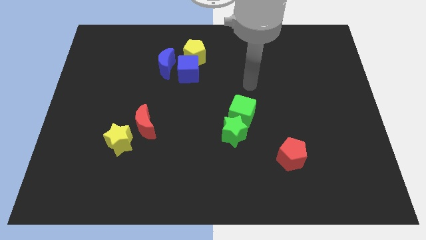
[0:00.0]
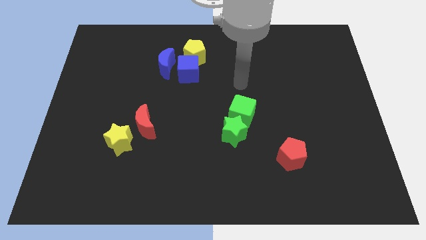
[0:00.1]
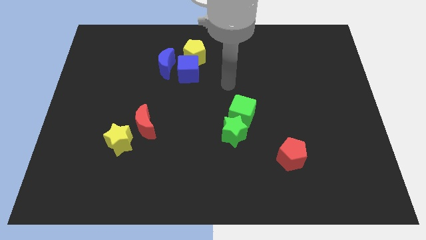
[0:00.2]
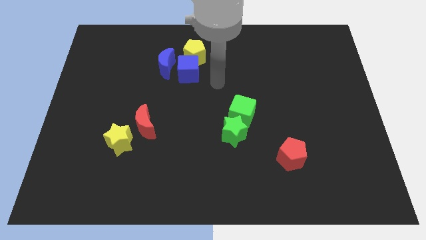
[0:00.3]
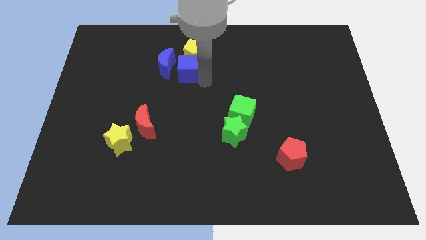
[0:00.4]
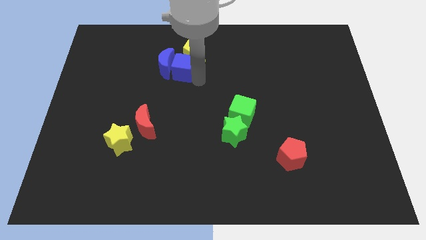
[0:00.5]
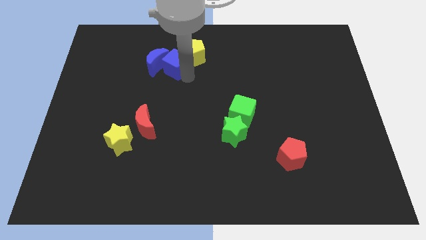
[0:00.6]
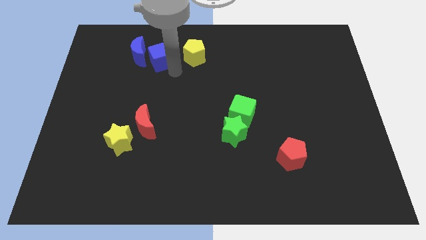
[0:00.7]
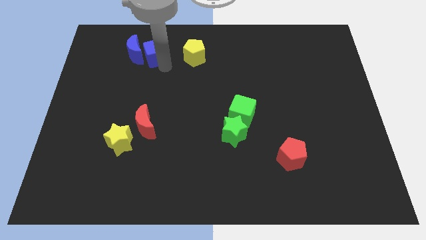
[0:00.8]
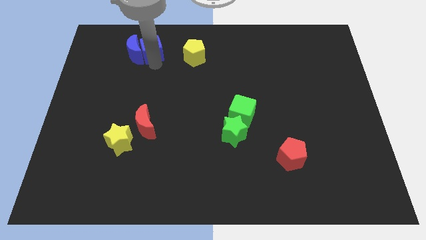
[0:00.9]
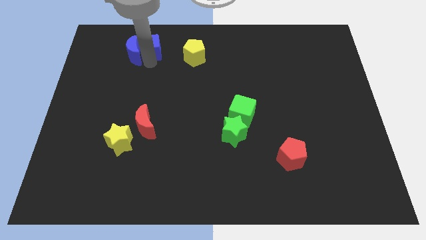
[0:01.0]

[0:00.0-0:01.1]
slide blue blocks up to the left of yellow pentagon

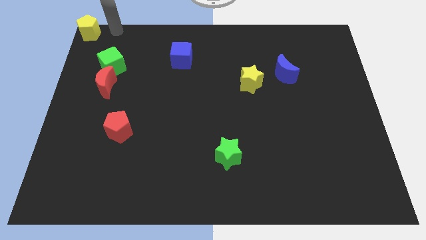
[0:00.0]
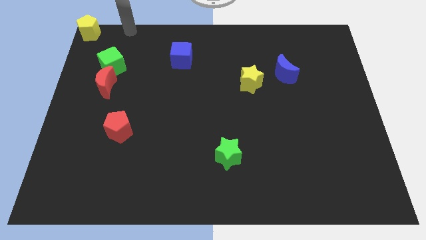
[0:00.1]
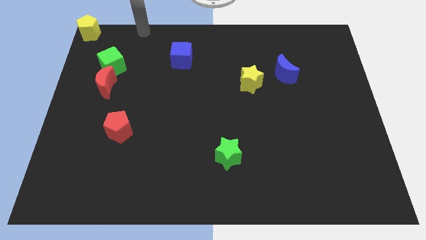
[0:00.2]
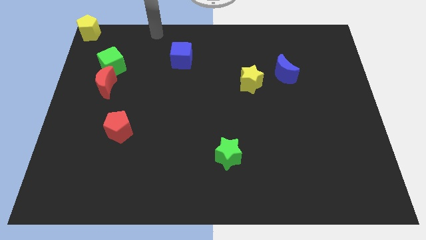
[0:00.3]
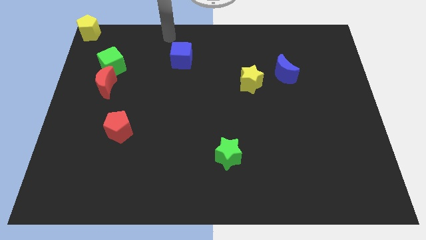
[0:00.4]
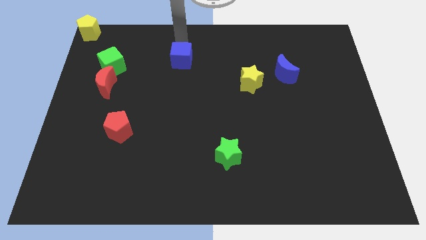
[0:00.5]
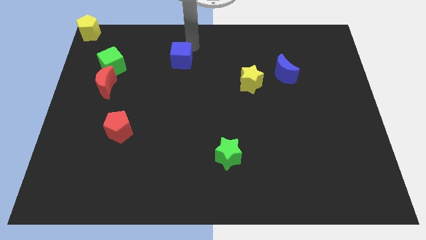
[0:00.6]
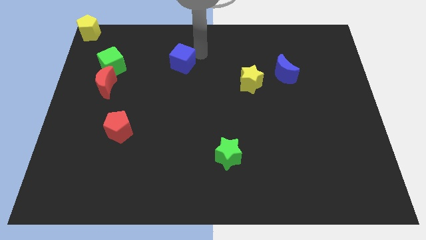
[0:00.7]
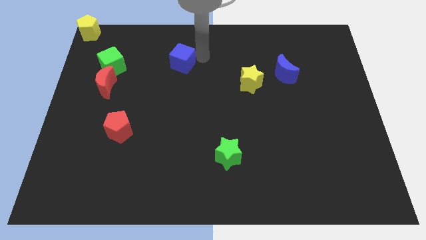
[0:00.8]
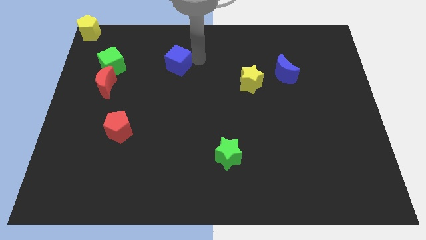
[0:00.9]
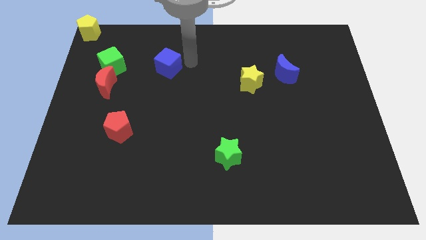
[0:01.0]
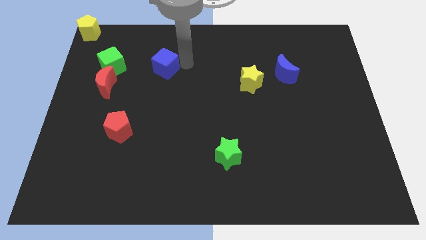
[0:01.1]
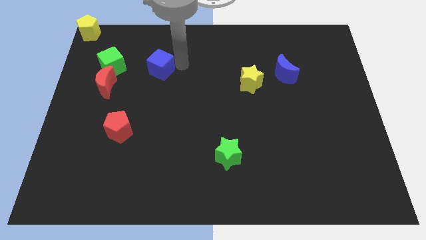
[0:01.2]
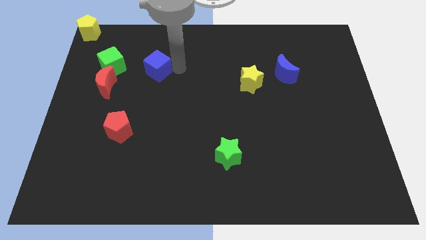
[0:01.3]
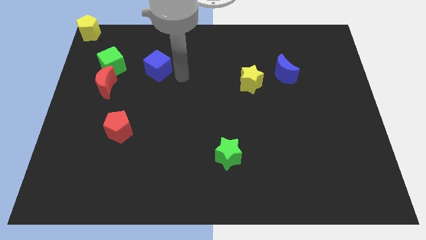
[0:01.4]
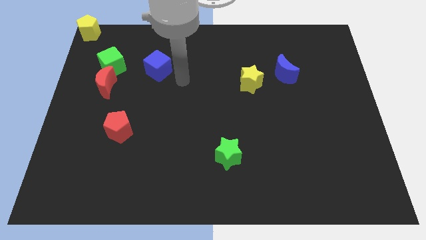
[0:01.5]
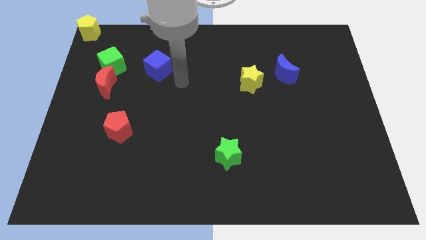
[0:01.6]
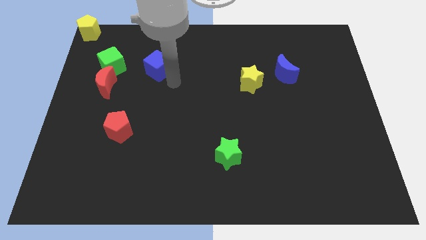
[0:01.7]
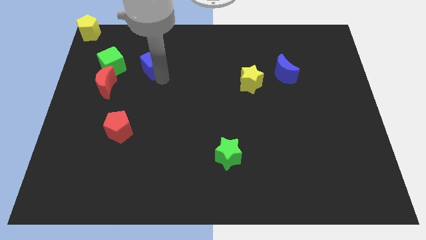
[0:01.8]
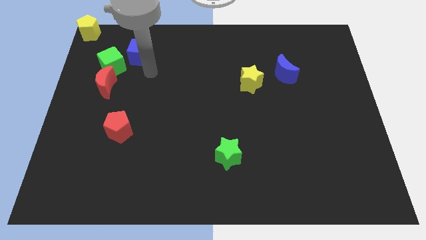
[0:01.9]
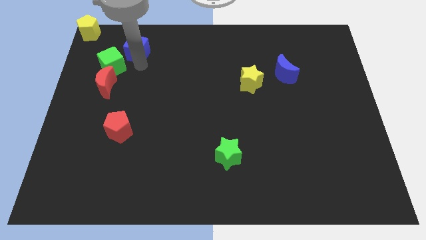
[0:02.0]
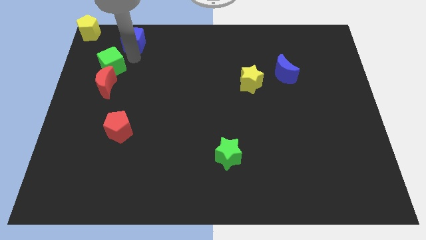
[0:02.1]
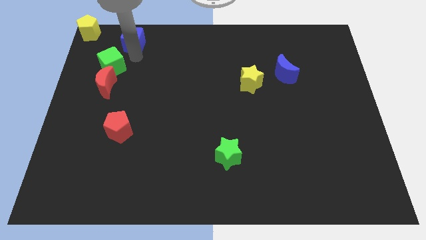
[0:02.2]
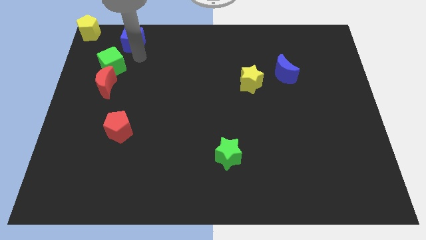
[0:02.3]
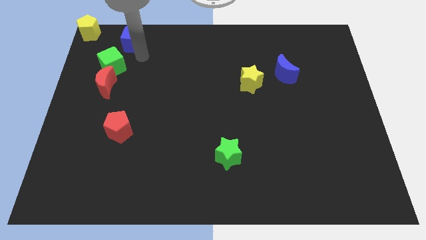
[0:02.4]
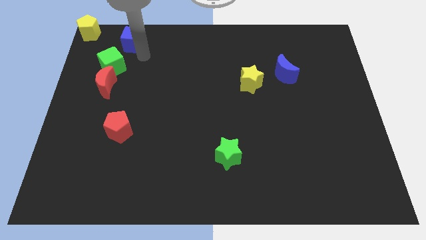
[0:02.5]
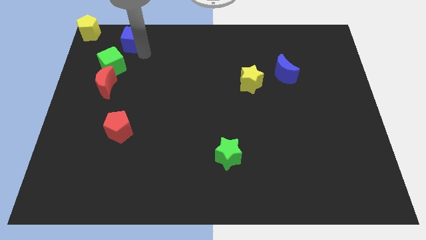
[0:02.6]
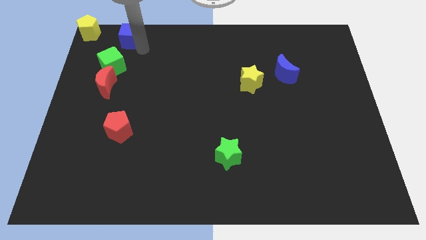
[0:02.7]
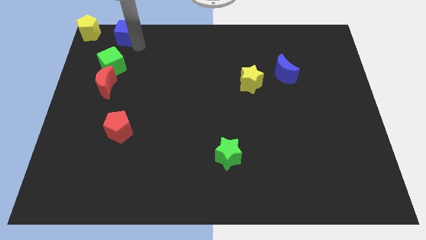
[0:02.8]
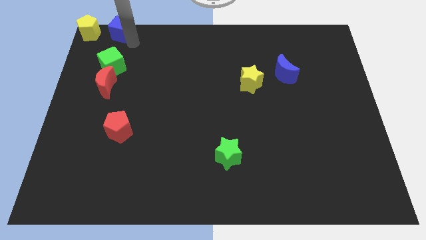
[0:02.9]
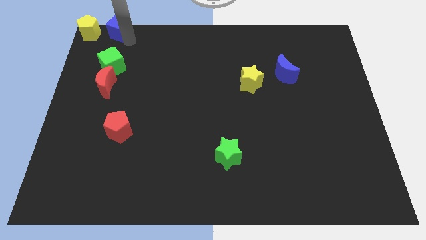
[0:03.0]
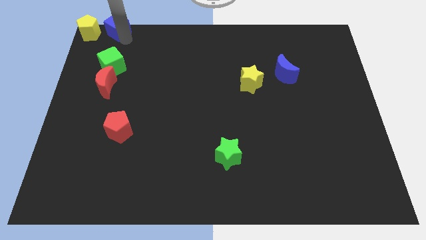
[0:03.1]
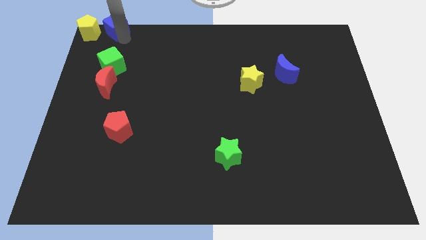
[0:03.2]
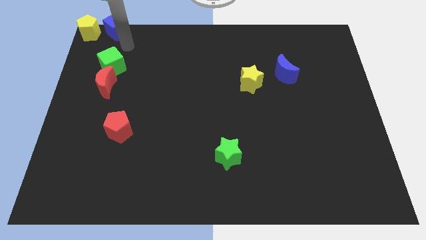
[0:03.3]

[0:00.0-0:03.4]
slide the blue cube to the right side of the yellow pentagon

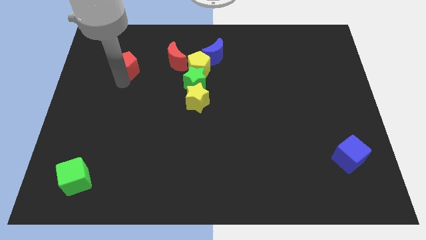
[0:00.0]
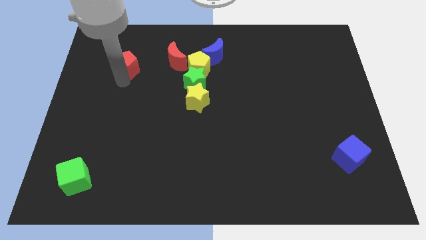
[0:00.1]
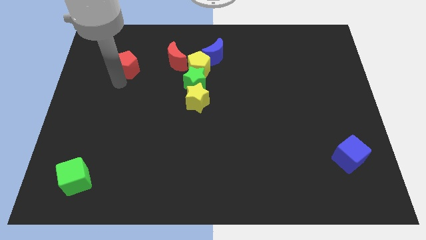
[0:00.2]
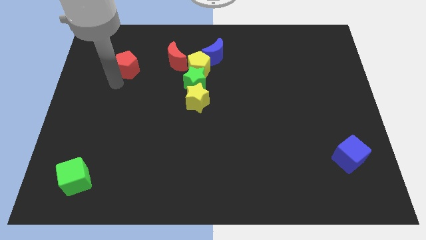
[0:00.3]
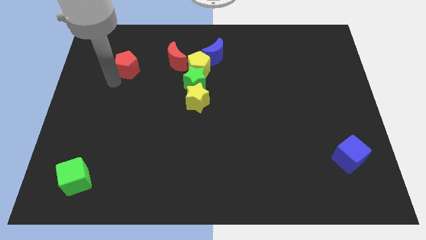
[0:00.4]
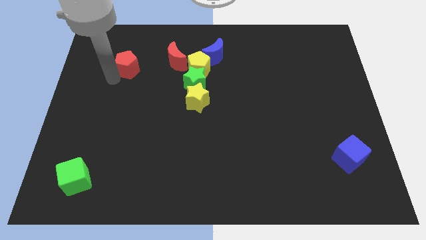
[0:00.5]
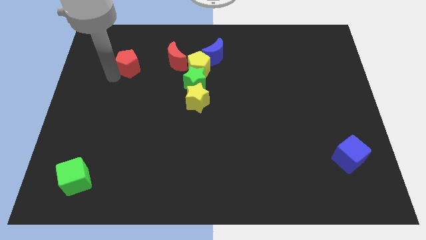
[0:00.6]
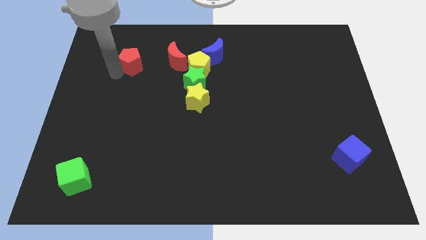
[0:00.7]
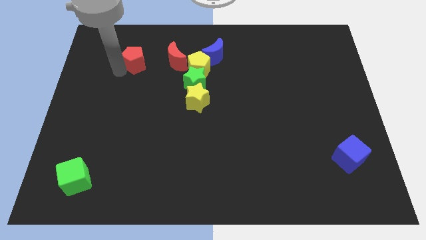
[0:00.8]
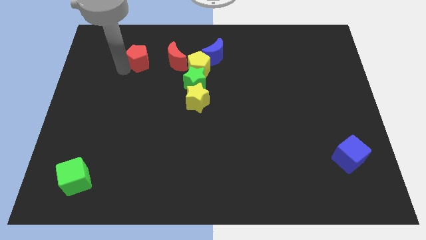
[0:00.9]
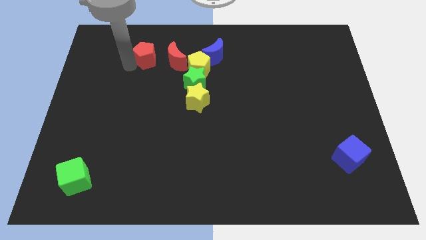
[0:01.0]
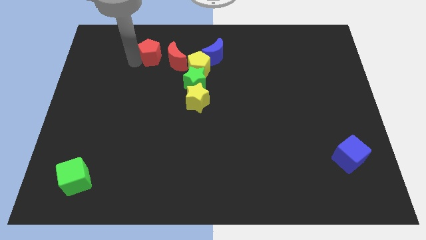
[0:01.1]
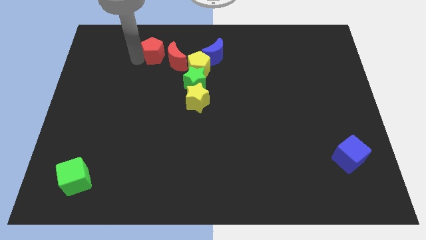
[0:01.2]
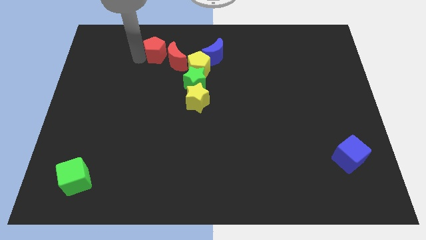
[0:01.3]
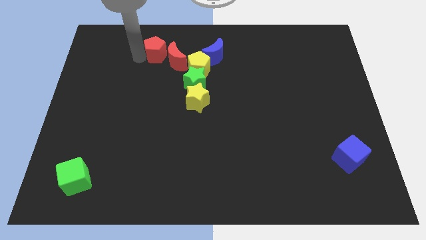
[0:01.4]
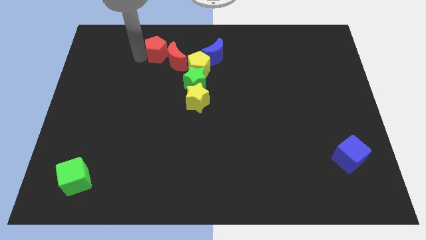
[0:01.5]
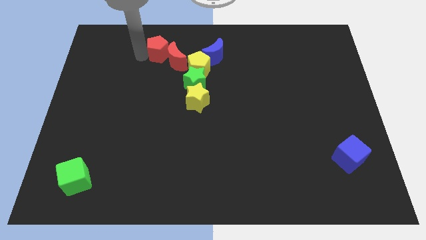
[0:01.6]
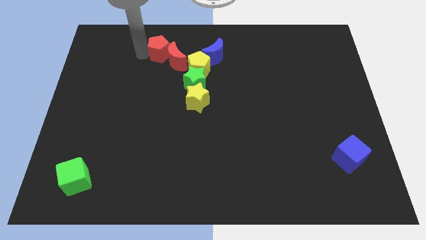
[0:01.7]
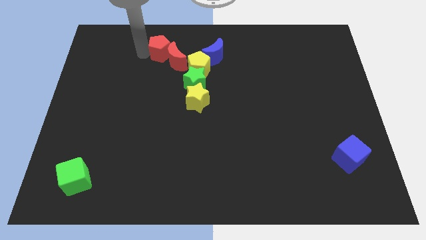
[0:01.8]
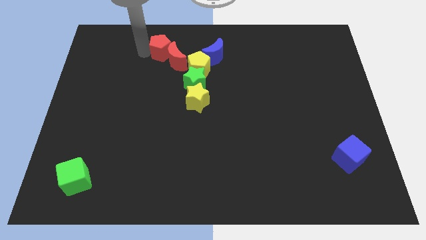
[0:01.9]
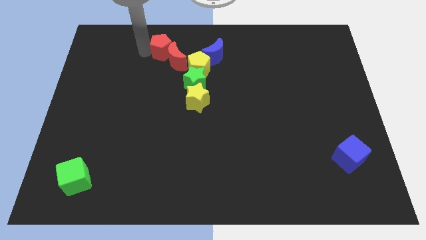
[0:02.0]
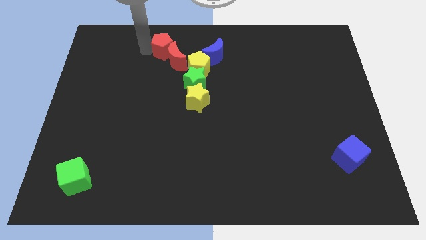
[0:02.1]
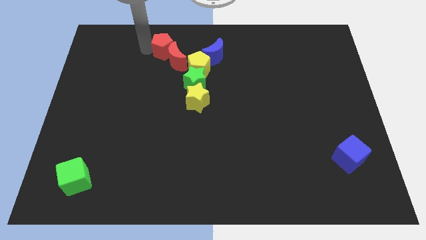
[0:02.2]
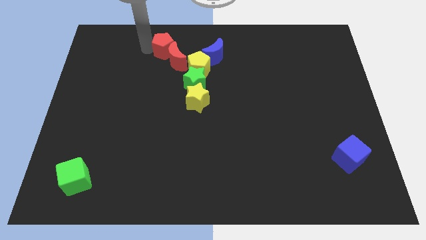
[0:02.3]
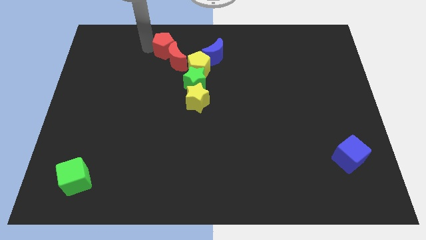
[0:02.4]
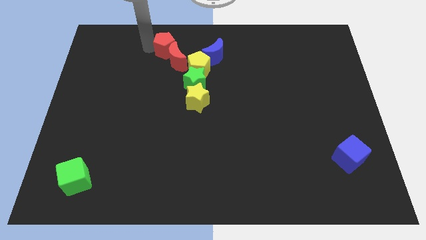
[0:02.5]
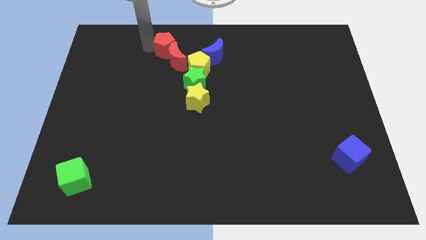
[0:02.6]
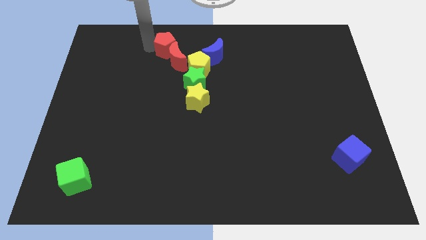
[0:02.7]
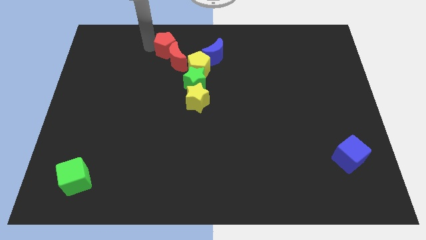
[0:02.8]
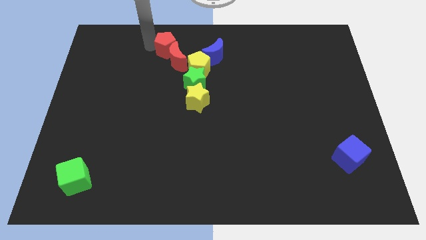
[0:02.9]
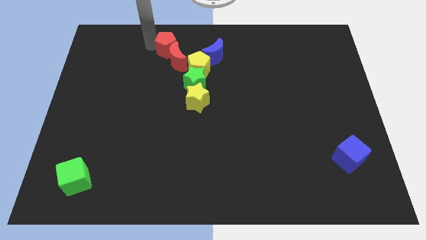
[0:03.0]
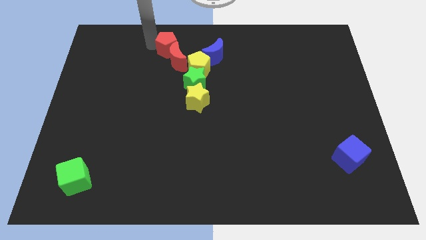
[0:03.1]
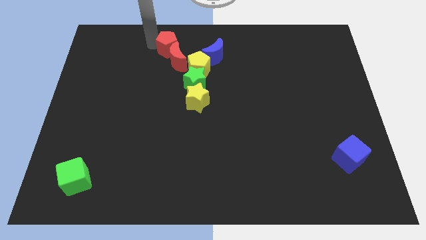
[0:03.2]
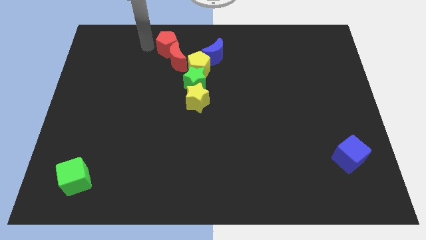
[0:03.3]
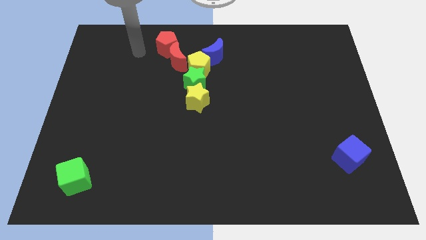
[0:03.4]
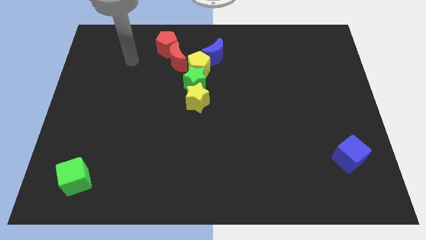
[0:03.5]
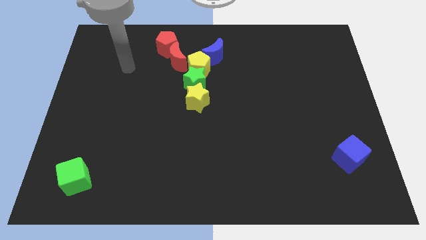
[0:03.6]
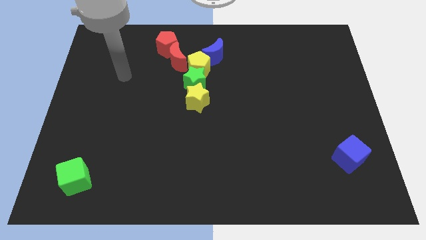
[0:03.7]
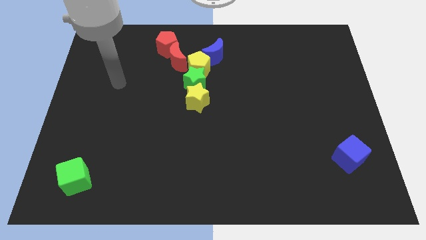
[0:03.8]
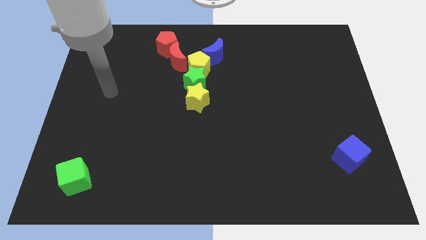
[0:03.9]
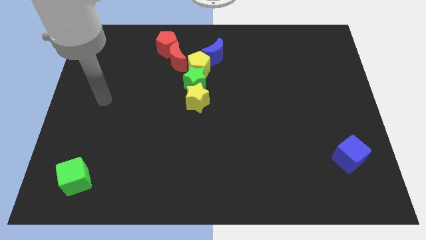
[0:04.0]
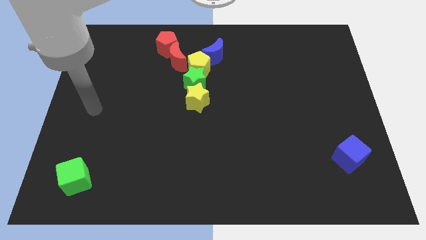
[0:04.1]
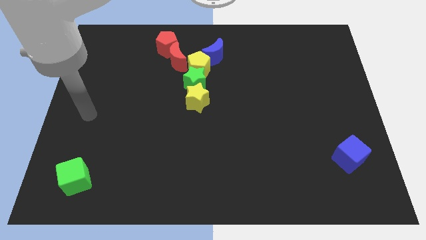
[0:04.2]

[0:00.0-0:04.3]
put red pentagon above red moon

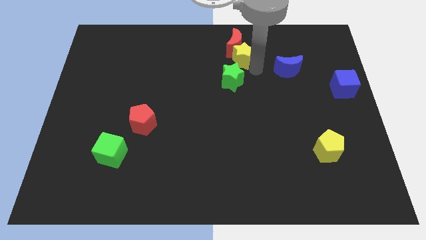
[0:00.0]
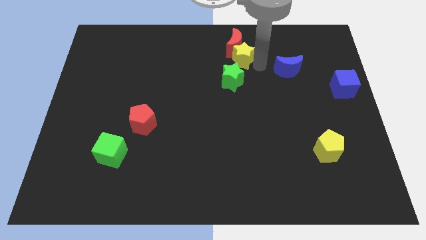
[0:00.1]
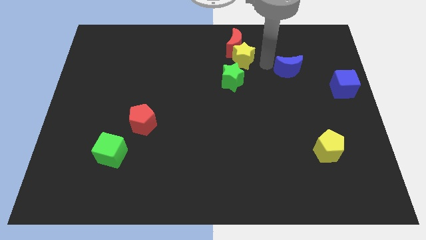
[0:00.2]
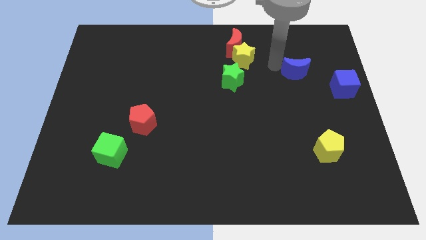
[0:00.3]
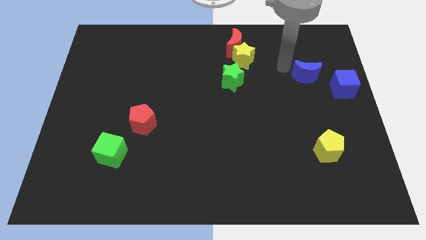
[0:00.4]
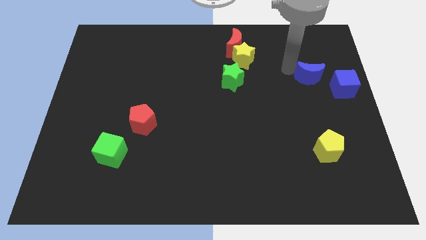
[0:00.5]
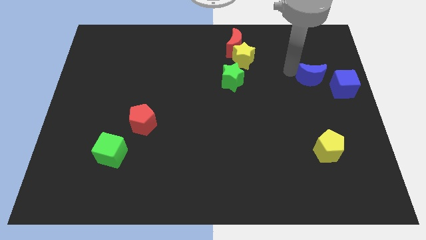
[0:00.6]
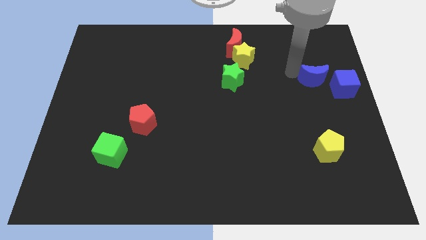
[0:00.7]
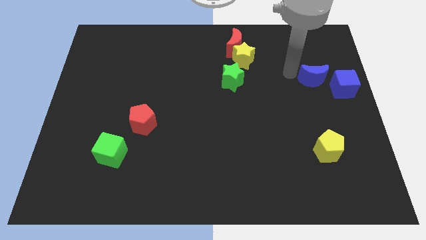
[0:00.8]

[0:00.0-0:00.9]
push the blue moon towards the blue cube
